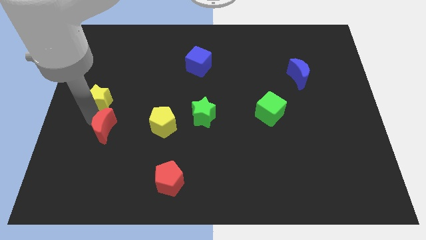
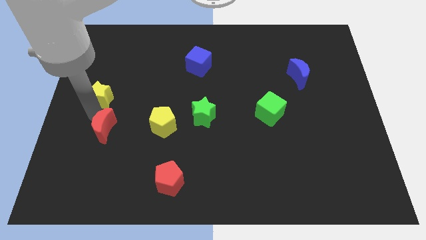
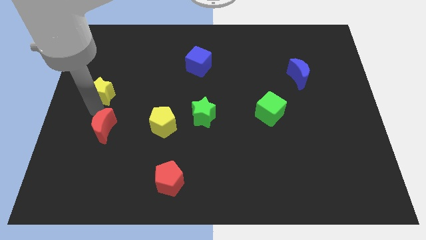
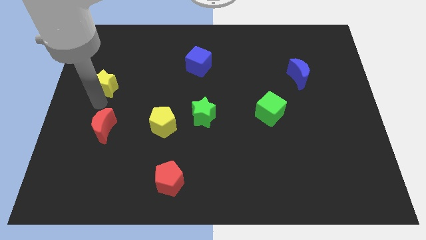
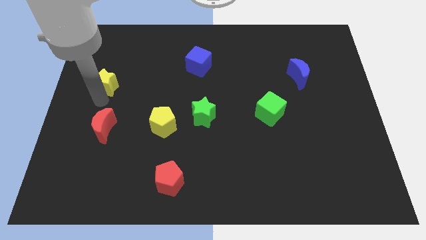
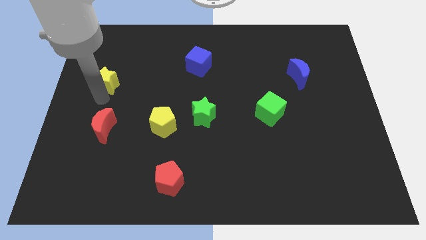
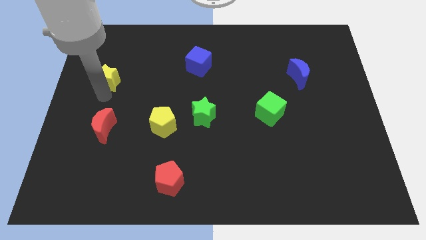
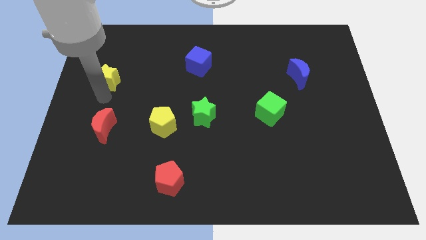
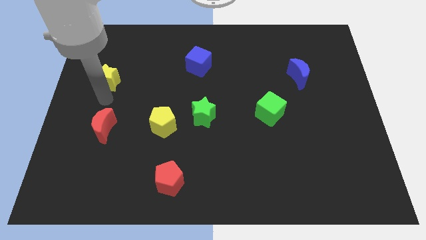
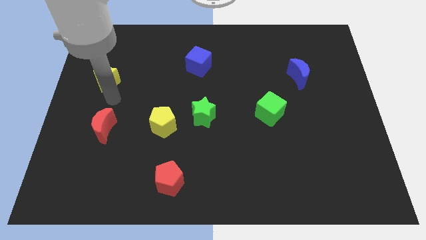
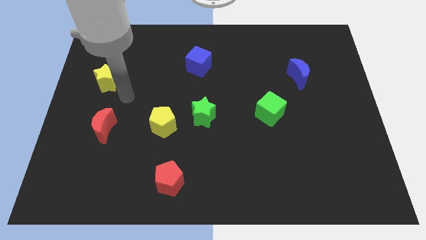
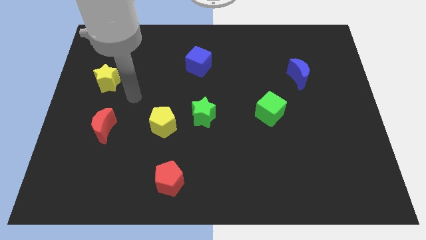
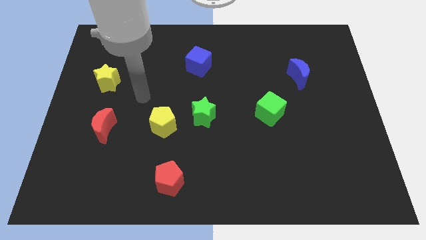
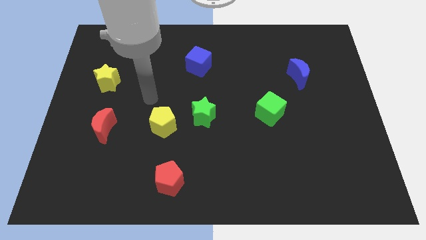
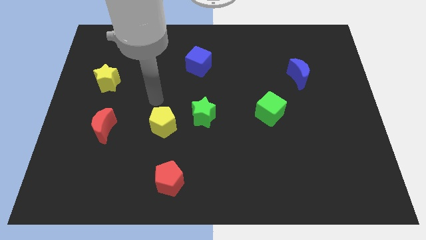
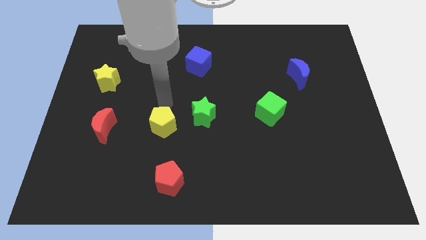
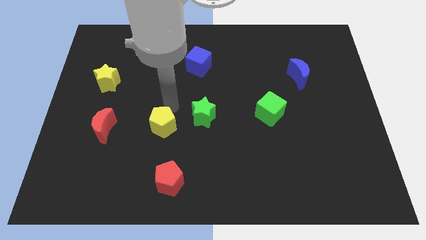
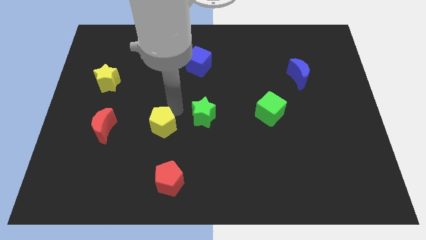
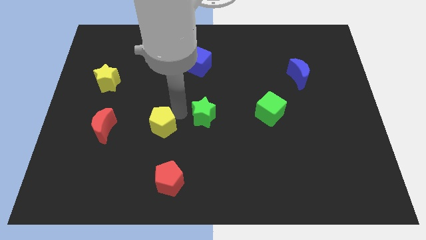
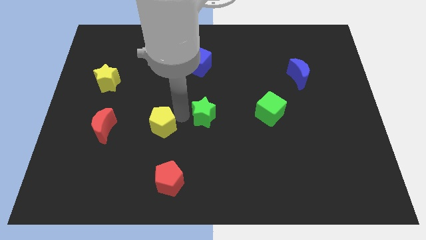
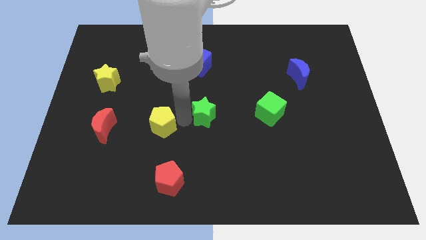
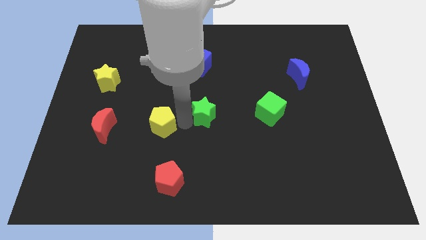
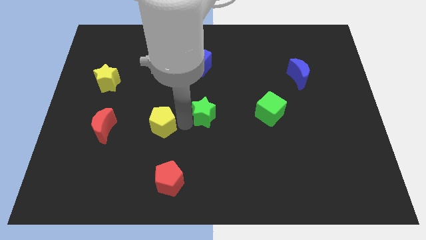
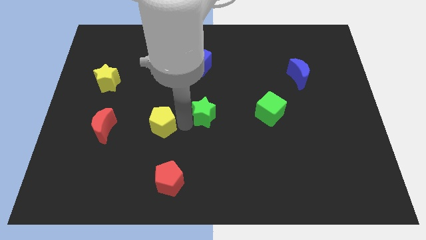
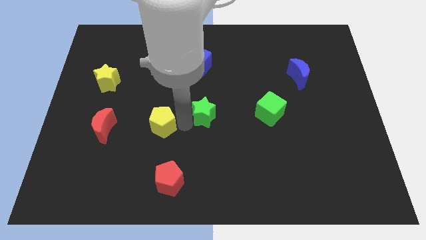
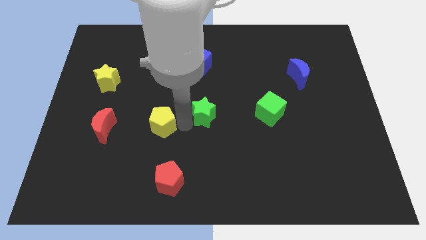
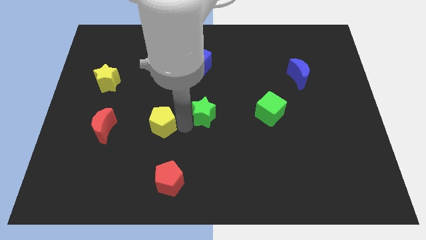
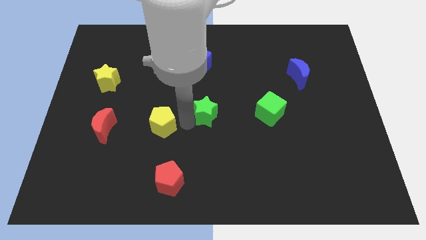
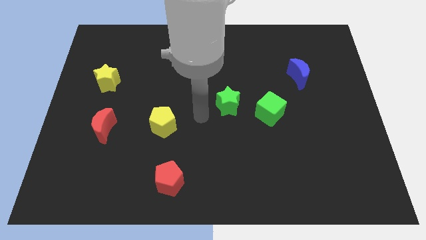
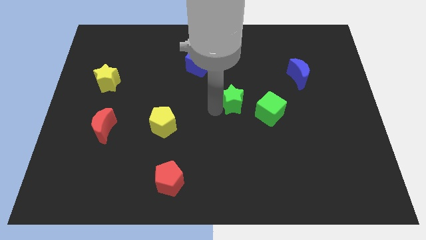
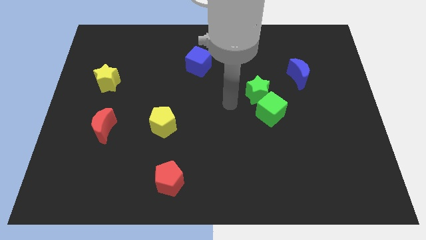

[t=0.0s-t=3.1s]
place the green star to the top left of green cube

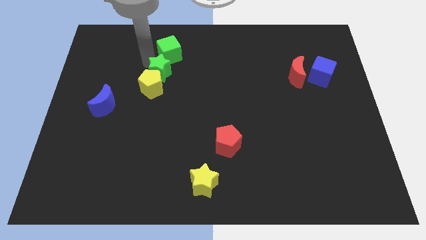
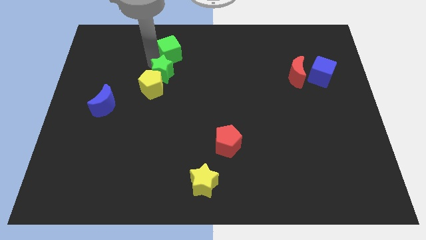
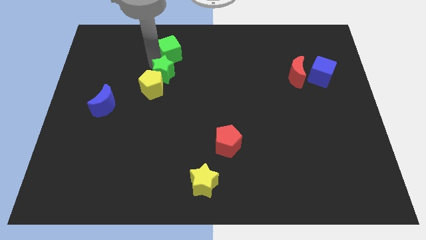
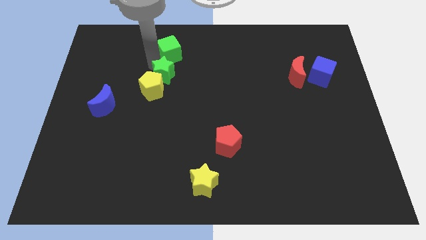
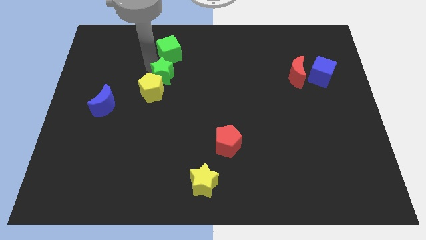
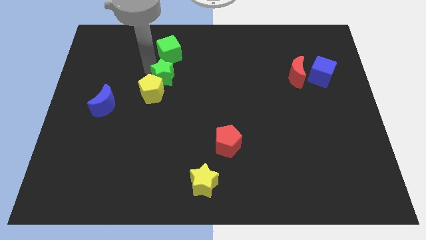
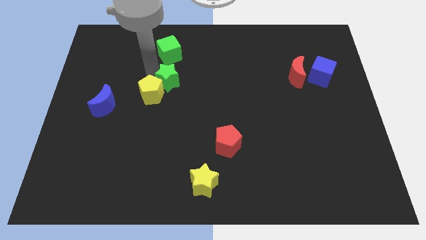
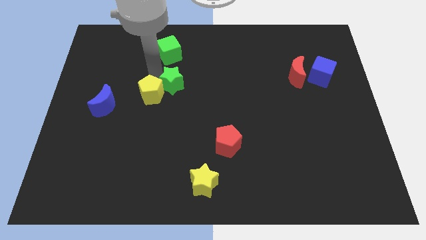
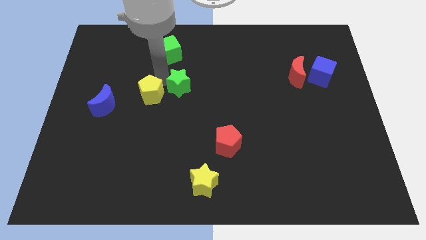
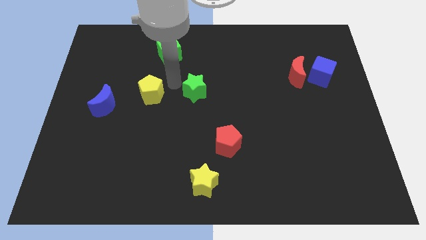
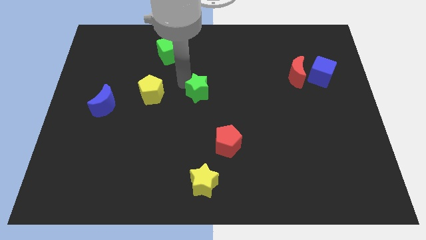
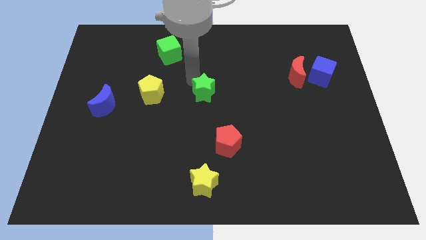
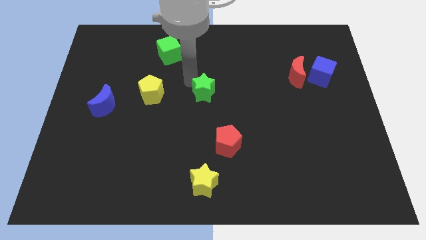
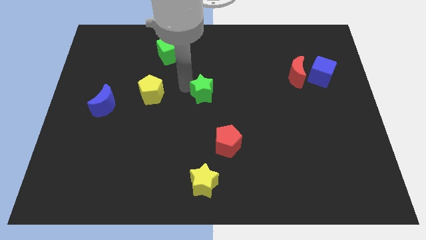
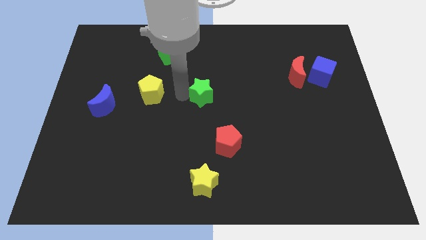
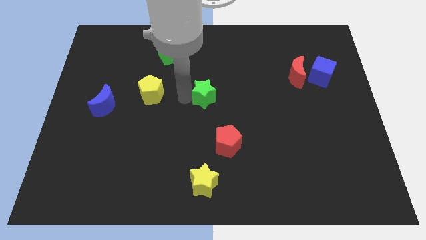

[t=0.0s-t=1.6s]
move the green star away from the yellow pentagongreen cube

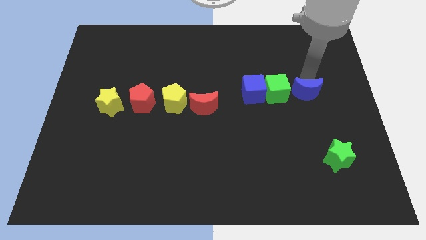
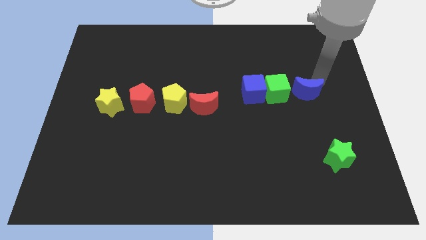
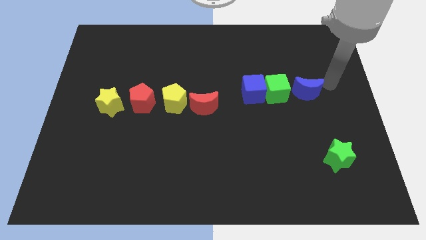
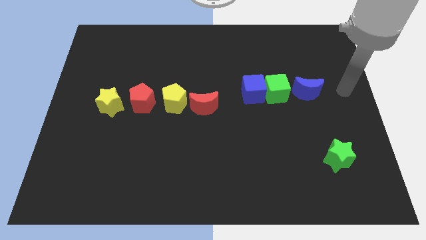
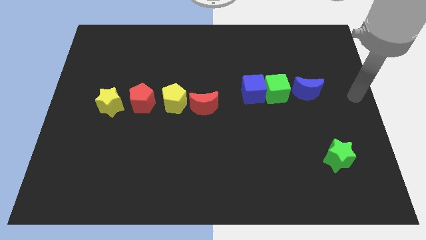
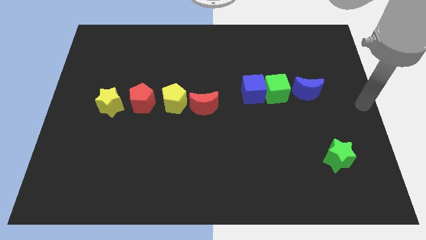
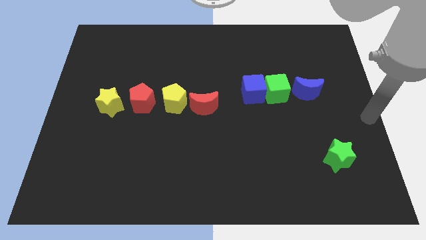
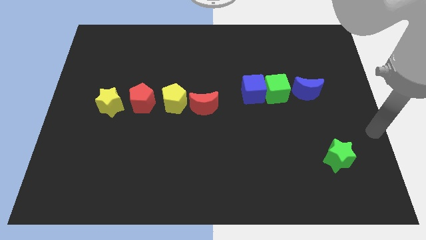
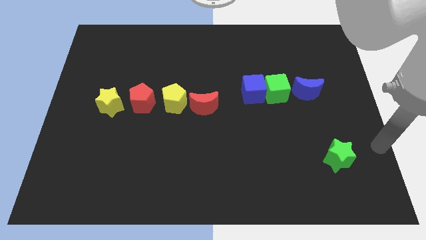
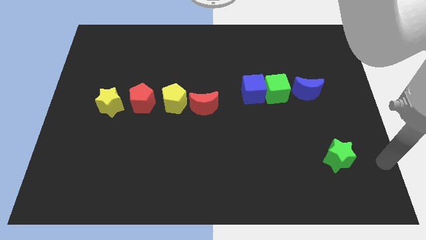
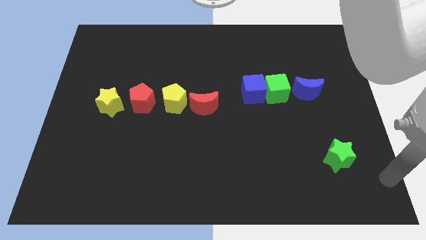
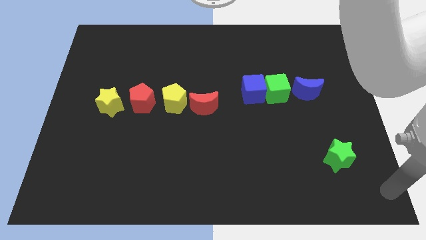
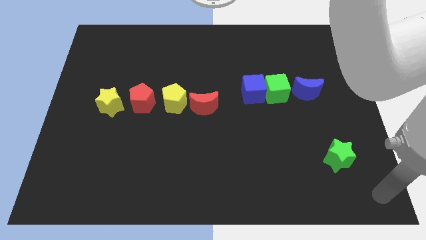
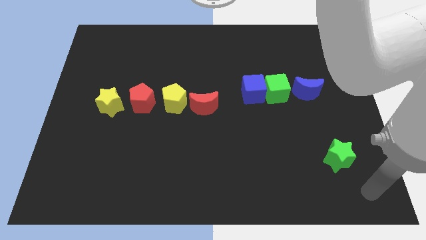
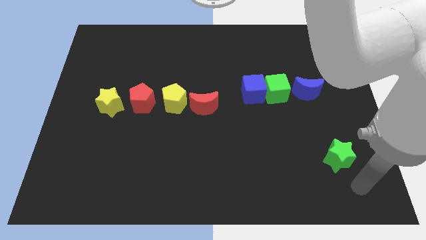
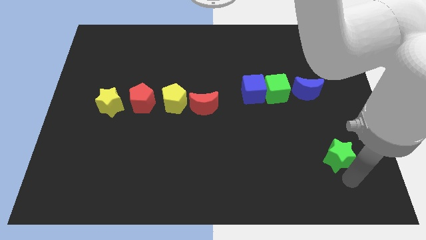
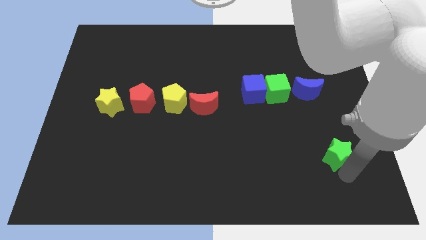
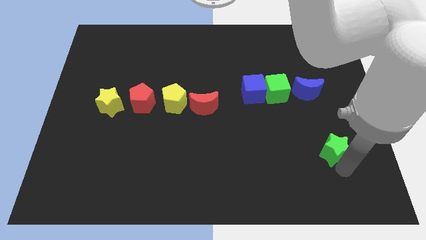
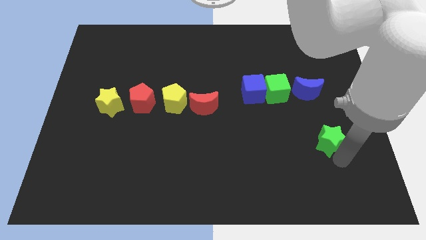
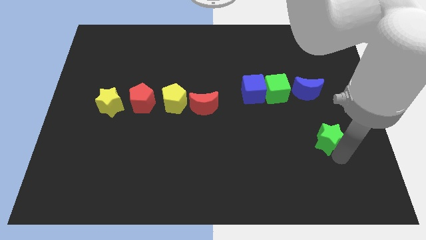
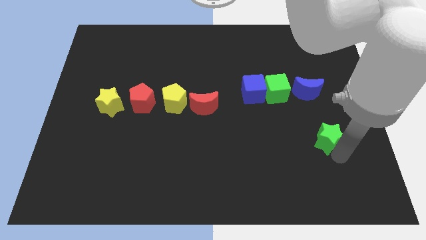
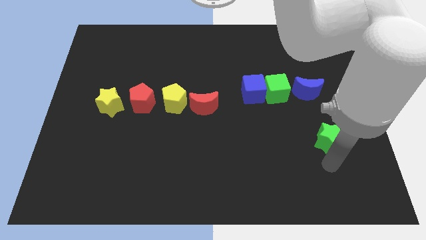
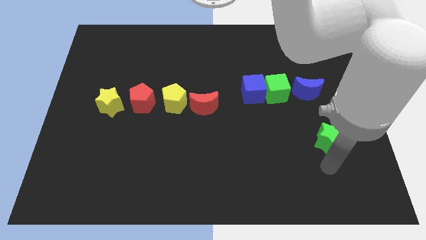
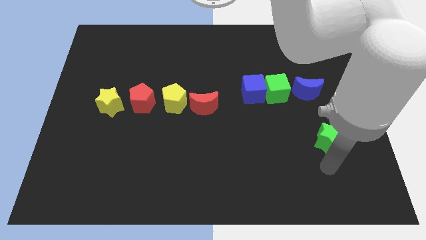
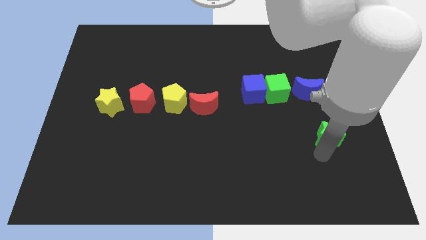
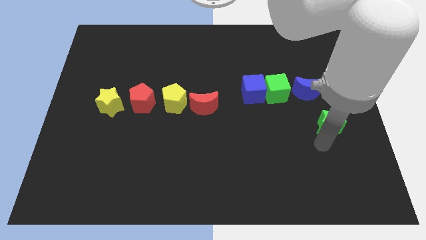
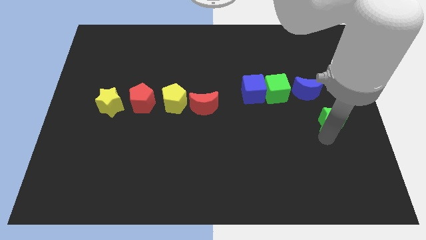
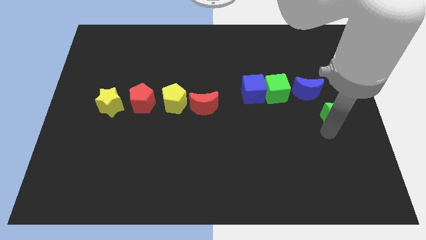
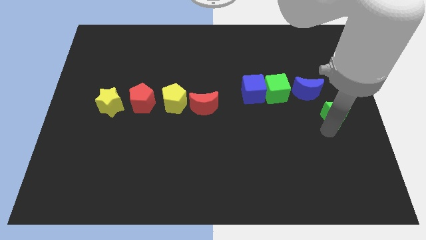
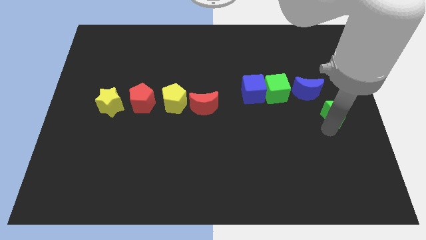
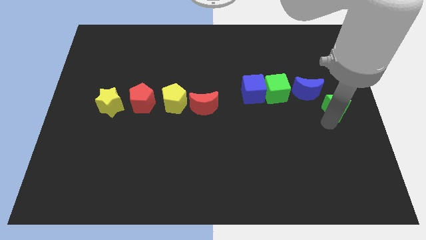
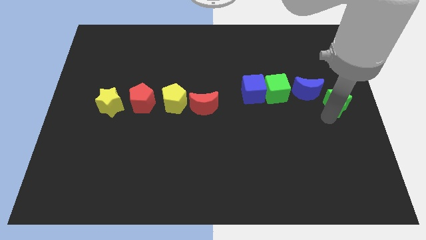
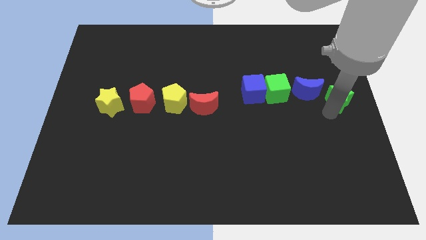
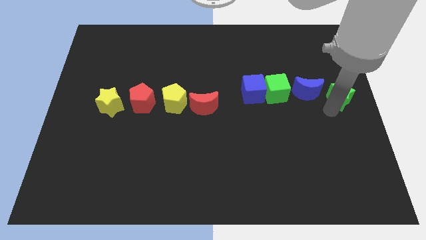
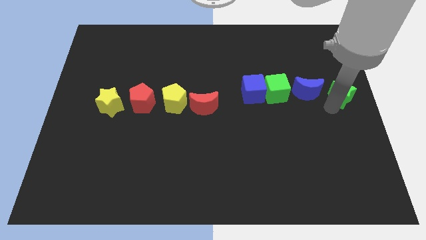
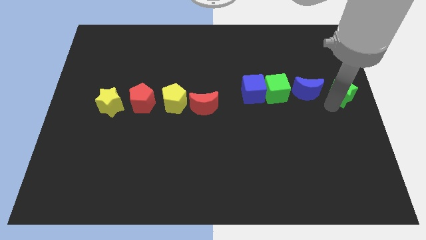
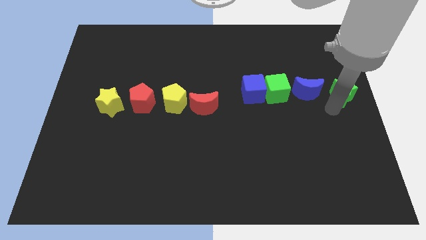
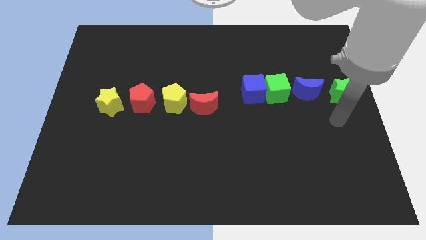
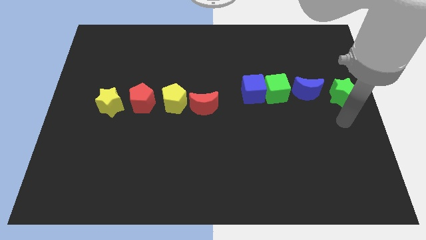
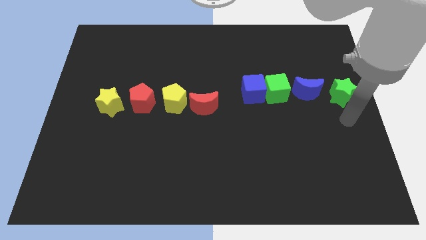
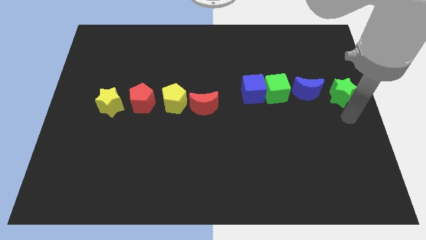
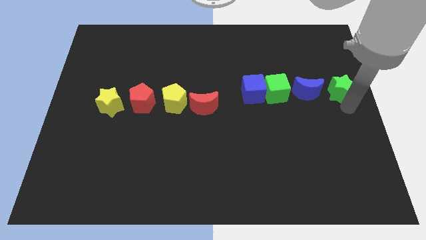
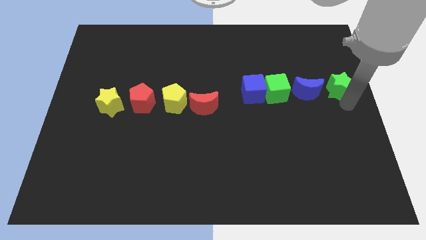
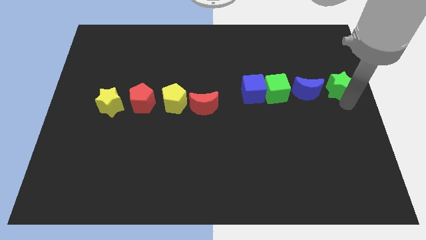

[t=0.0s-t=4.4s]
drag the green star towards upwards
